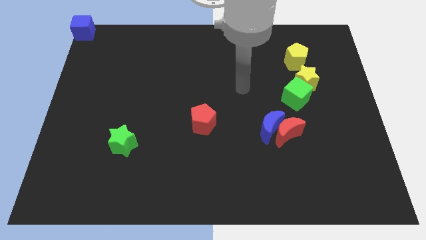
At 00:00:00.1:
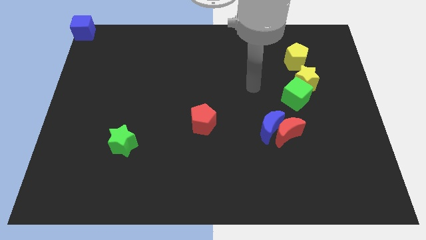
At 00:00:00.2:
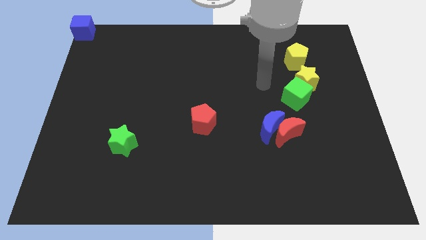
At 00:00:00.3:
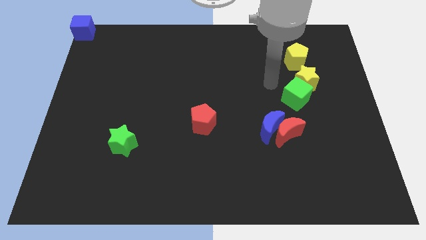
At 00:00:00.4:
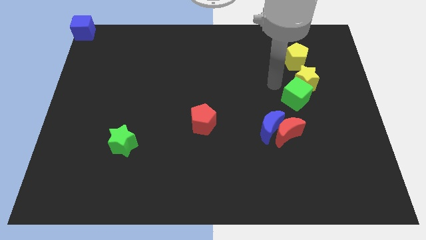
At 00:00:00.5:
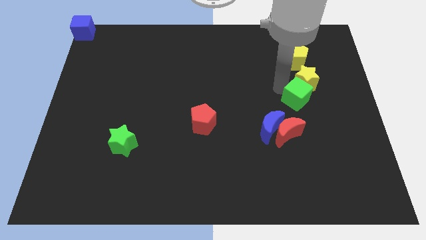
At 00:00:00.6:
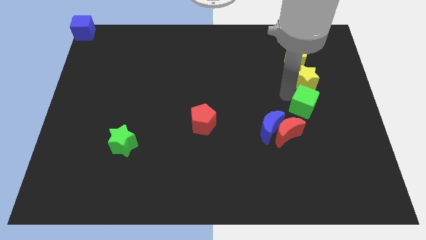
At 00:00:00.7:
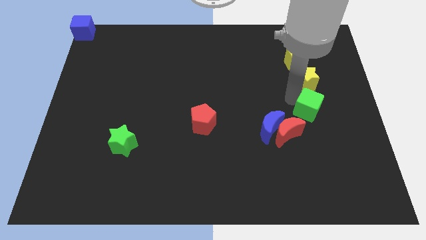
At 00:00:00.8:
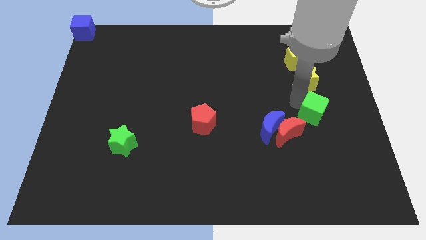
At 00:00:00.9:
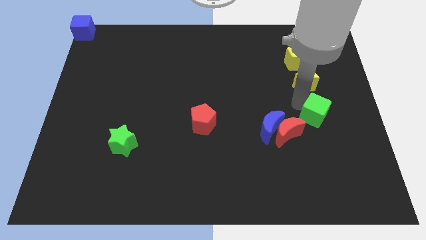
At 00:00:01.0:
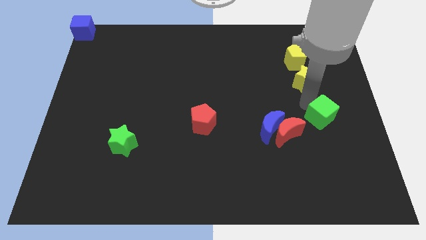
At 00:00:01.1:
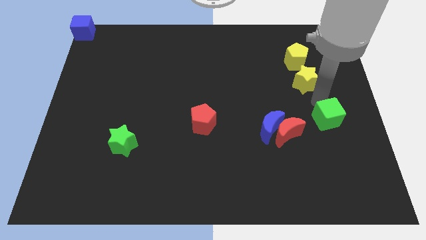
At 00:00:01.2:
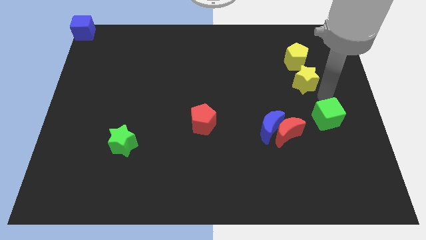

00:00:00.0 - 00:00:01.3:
move the green cube to the top right side of the red moon

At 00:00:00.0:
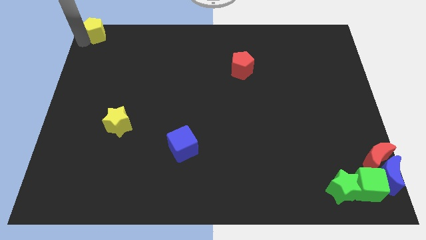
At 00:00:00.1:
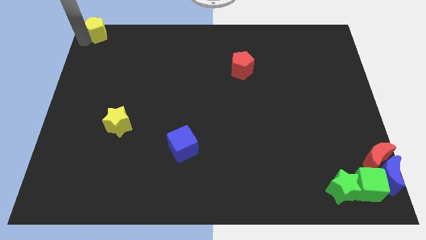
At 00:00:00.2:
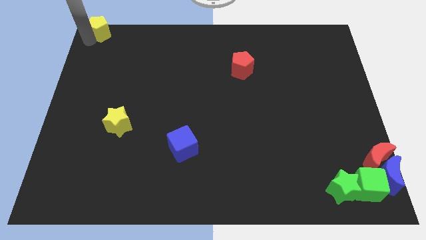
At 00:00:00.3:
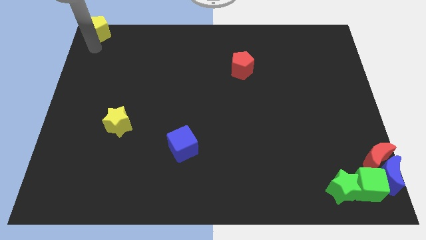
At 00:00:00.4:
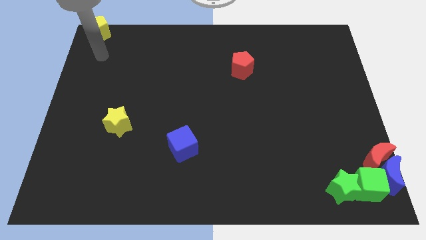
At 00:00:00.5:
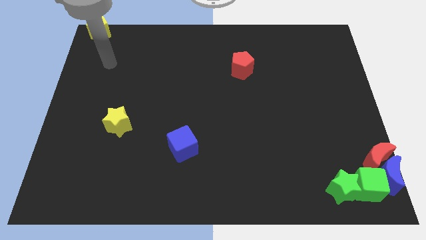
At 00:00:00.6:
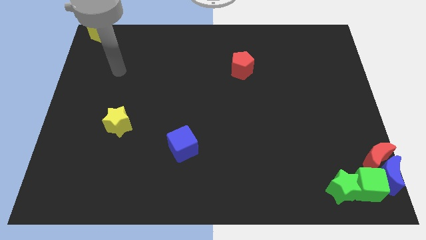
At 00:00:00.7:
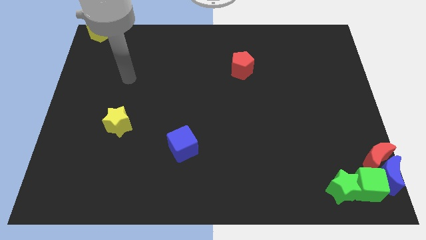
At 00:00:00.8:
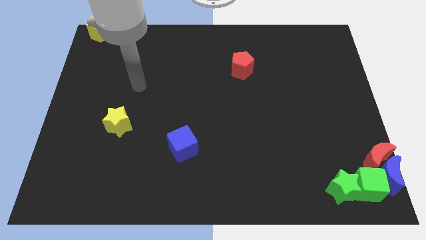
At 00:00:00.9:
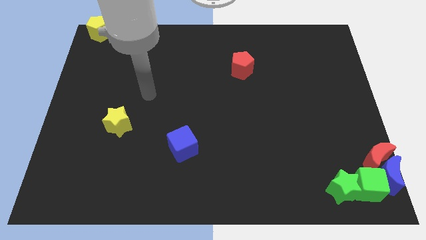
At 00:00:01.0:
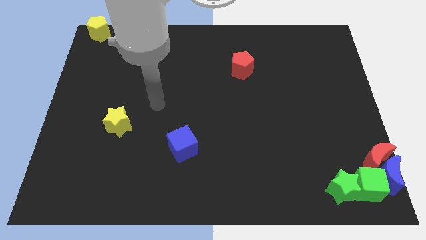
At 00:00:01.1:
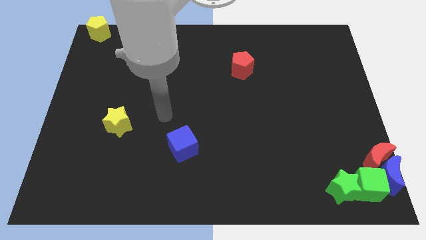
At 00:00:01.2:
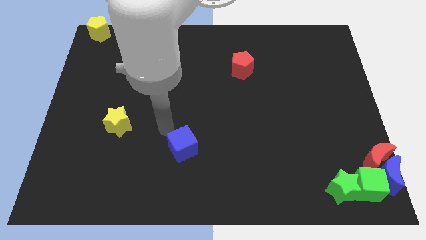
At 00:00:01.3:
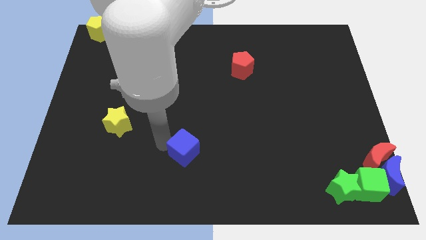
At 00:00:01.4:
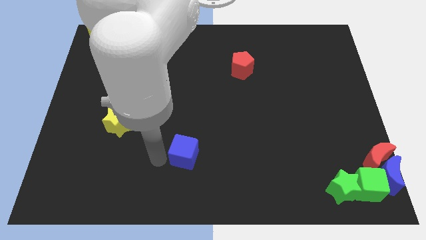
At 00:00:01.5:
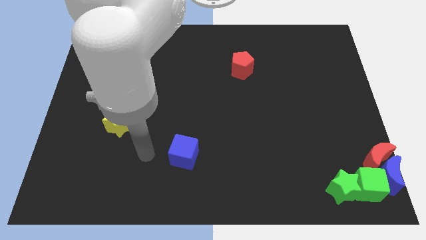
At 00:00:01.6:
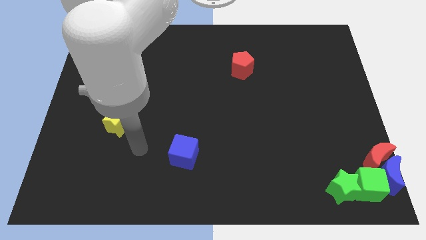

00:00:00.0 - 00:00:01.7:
move your arm away from yellow pentagon

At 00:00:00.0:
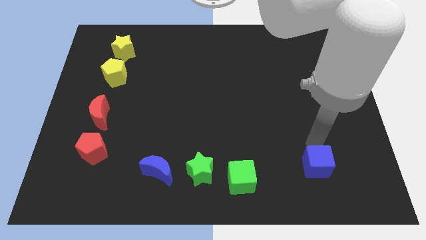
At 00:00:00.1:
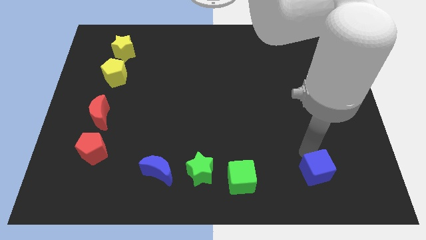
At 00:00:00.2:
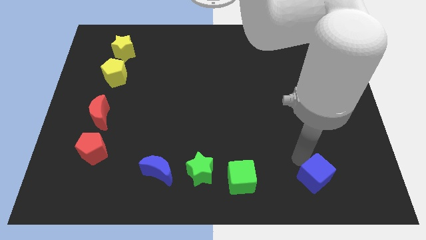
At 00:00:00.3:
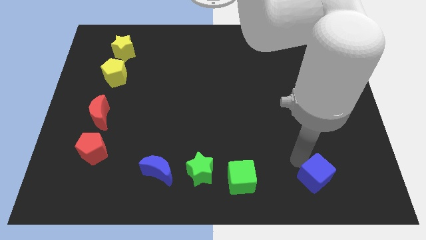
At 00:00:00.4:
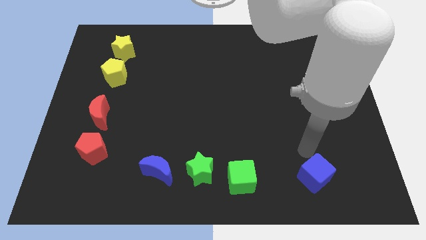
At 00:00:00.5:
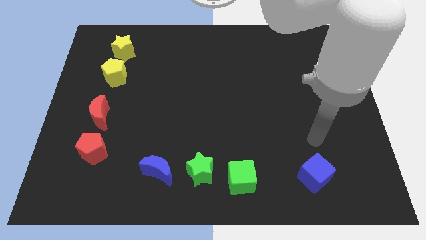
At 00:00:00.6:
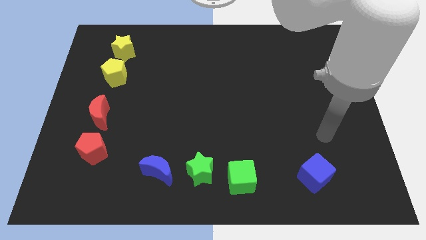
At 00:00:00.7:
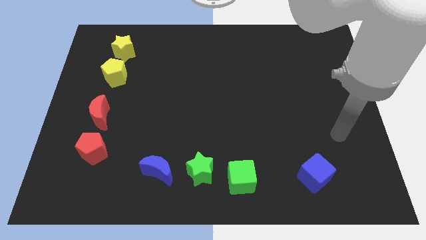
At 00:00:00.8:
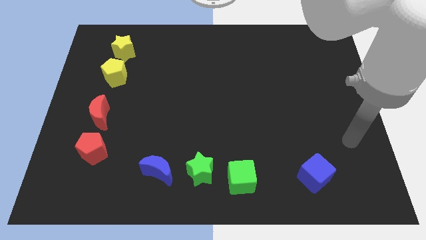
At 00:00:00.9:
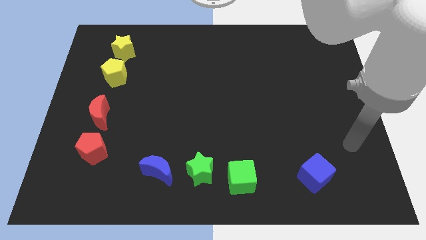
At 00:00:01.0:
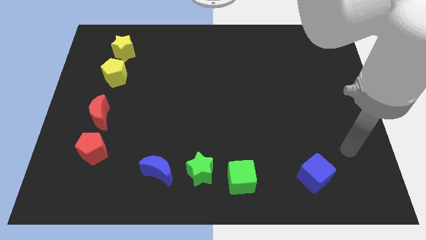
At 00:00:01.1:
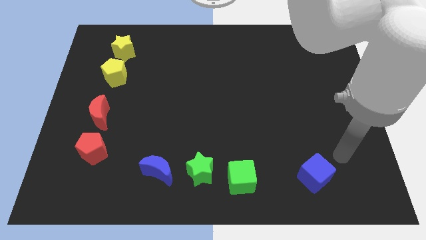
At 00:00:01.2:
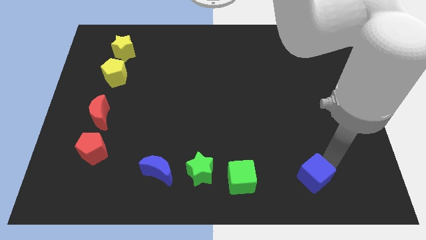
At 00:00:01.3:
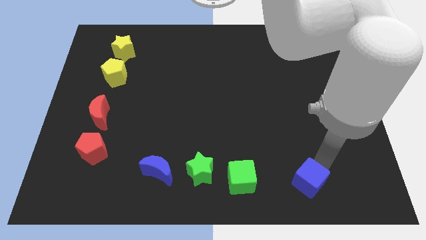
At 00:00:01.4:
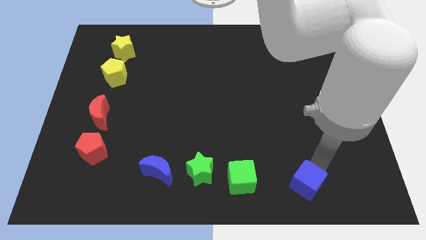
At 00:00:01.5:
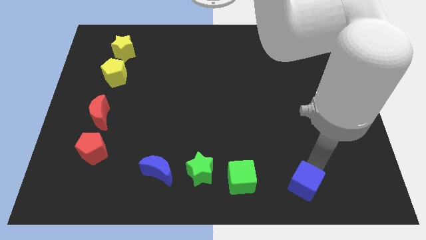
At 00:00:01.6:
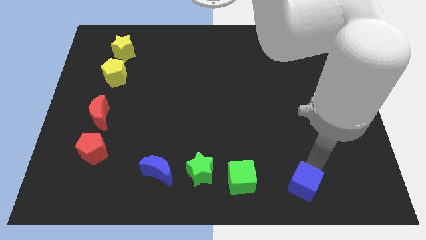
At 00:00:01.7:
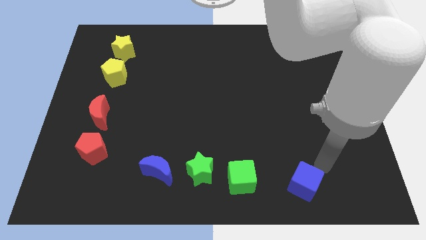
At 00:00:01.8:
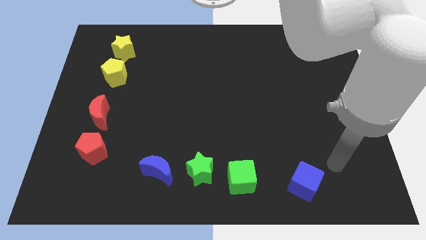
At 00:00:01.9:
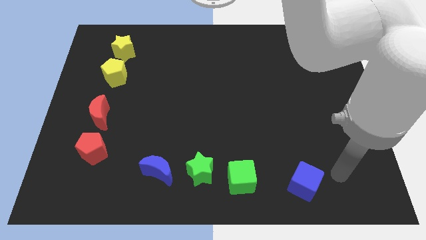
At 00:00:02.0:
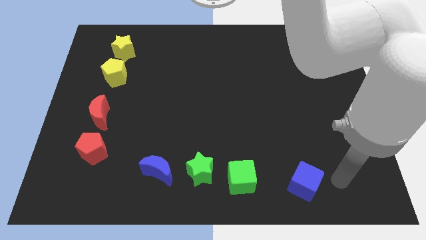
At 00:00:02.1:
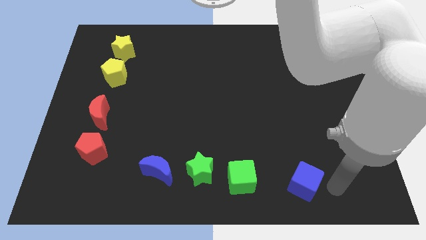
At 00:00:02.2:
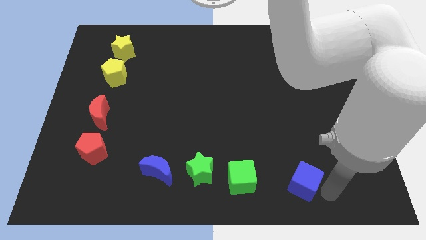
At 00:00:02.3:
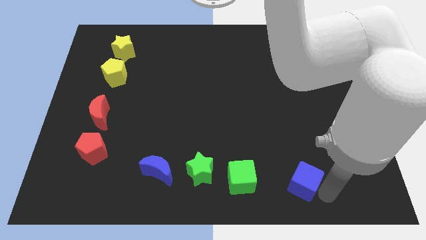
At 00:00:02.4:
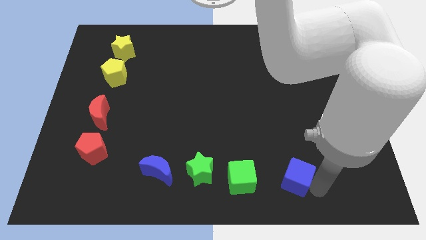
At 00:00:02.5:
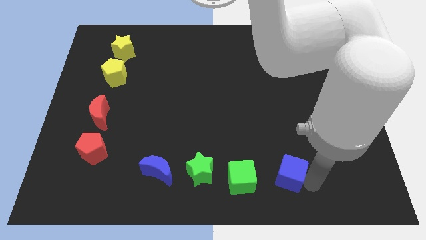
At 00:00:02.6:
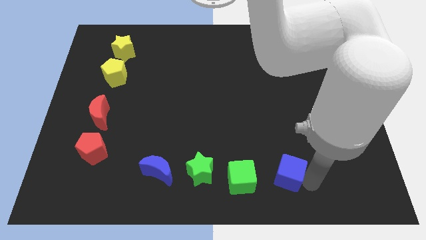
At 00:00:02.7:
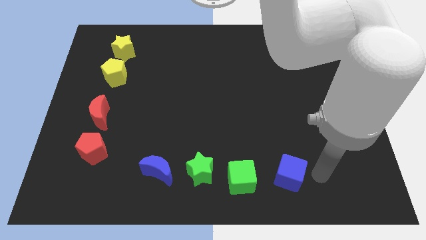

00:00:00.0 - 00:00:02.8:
place the blue cube to the right of green cube

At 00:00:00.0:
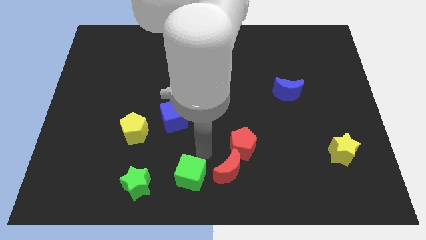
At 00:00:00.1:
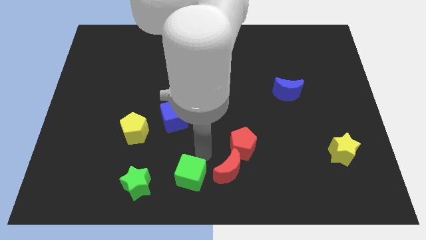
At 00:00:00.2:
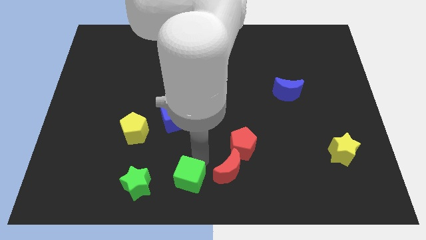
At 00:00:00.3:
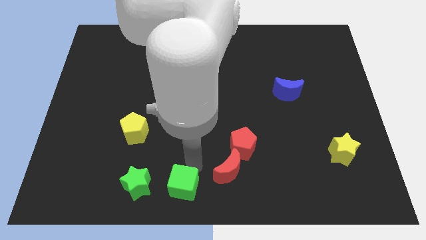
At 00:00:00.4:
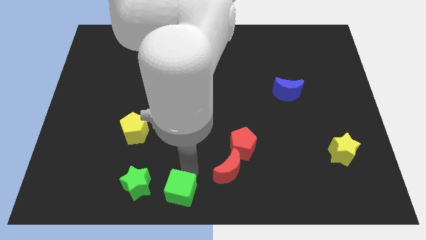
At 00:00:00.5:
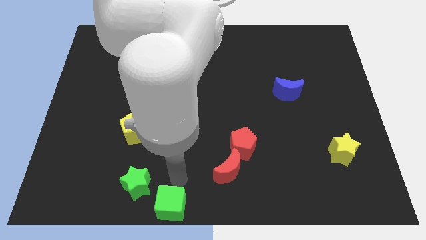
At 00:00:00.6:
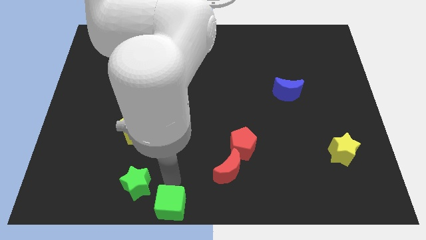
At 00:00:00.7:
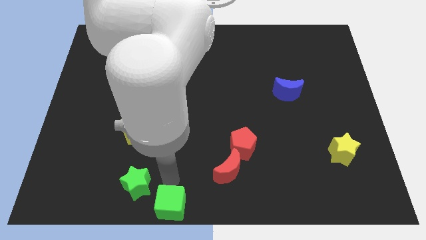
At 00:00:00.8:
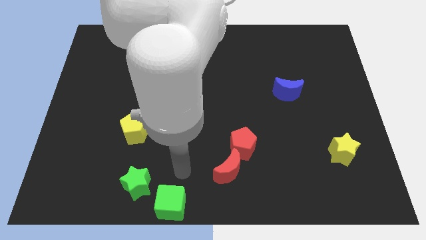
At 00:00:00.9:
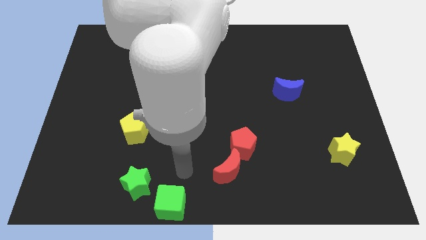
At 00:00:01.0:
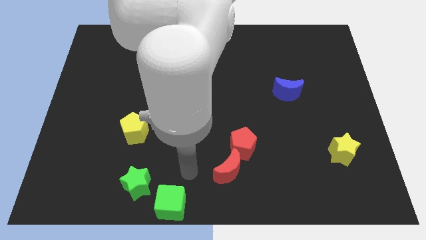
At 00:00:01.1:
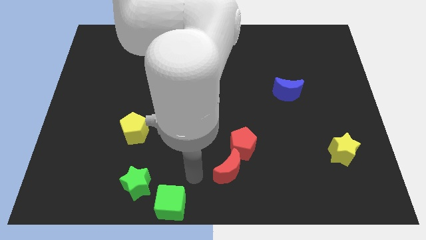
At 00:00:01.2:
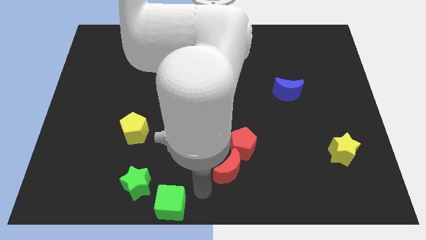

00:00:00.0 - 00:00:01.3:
move the green cube to the bottom right of the green star

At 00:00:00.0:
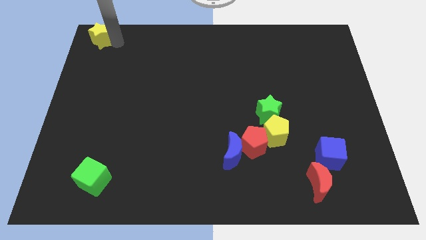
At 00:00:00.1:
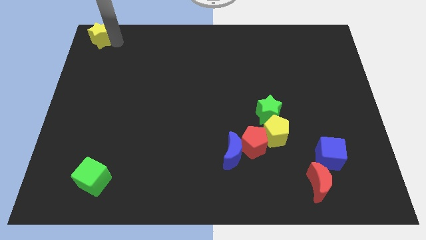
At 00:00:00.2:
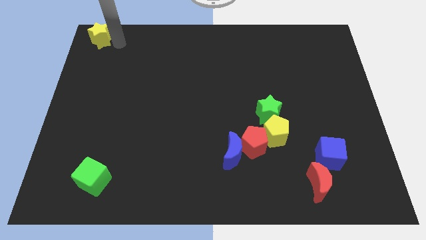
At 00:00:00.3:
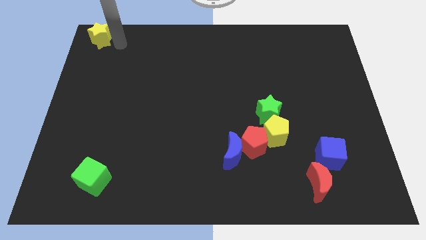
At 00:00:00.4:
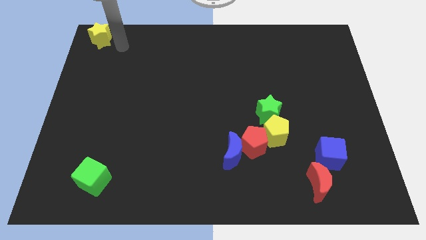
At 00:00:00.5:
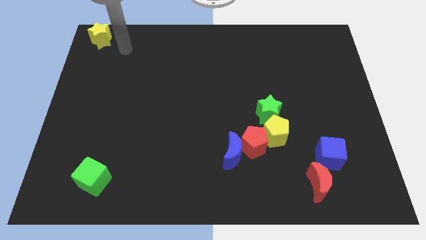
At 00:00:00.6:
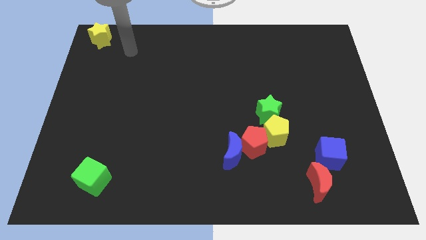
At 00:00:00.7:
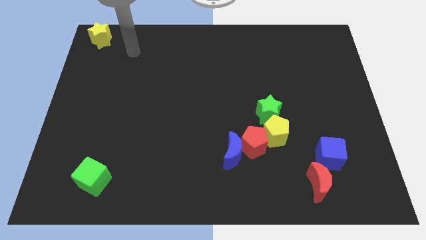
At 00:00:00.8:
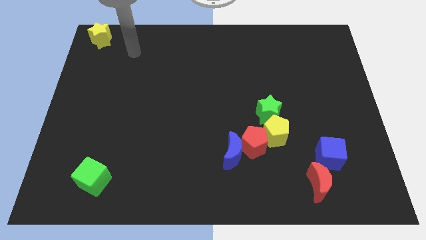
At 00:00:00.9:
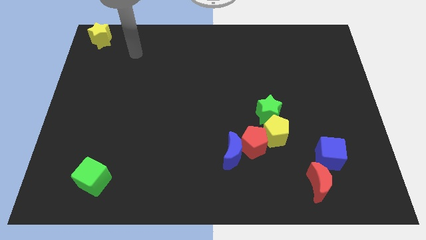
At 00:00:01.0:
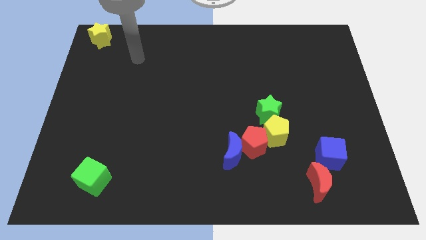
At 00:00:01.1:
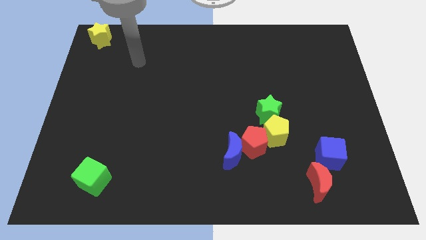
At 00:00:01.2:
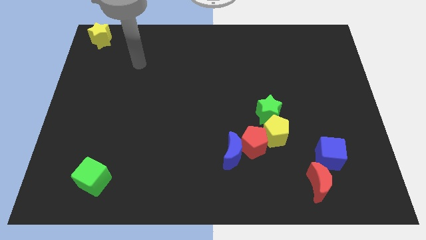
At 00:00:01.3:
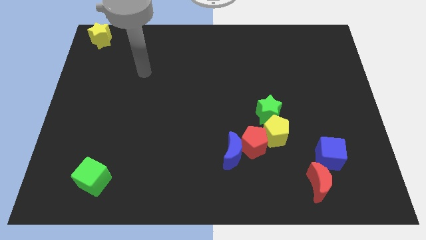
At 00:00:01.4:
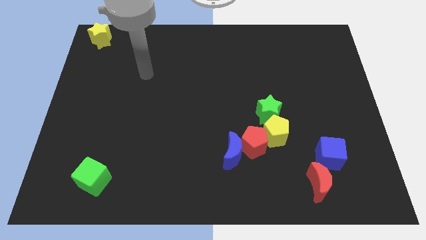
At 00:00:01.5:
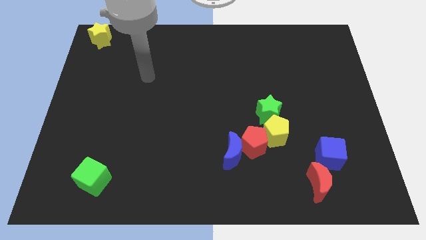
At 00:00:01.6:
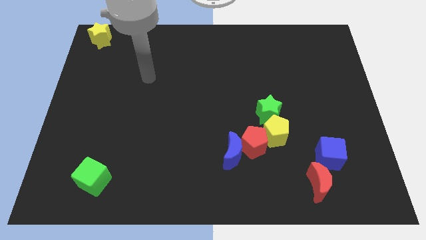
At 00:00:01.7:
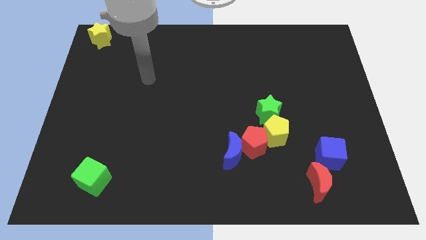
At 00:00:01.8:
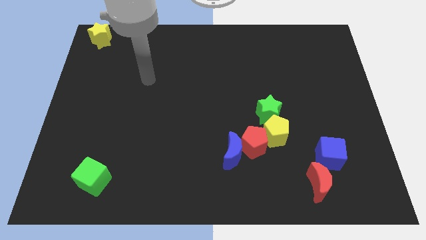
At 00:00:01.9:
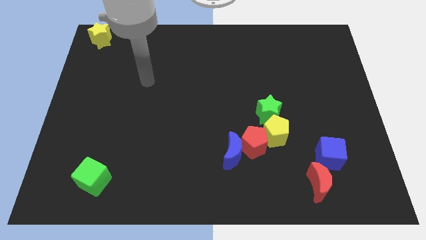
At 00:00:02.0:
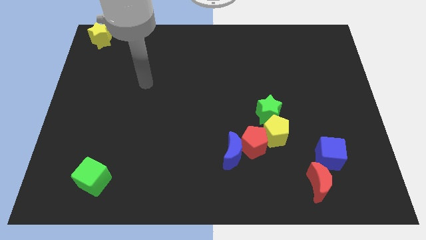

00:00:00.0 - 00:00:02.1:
move the arm away from the yellow star
